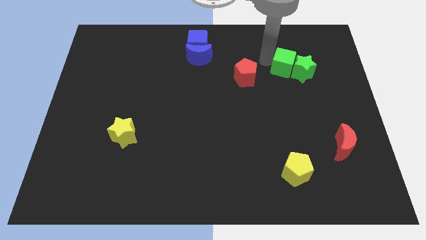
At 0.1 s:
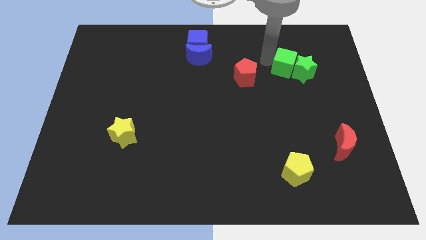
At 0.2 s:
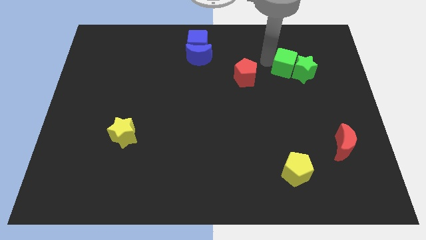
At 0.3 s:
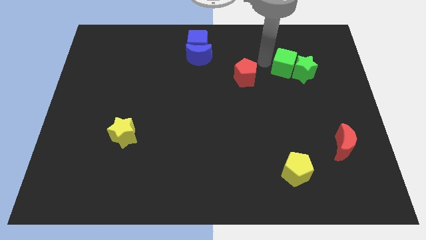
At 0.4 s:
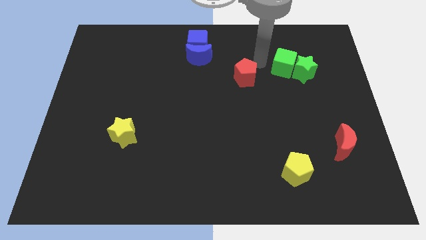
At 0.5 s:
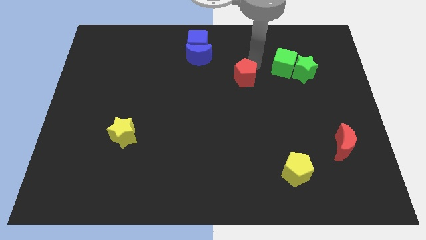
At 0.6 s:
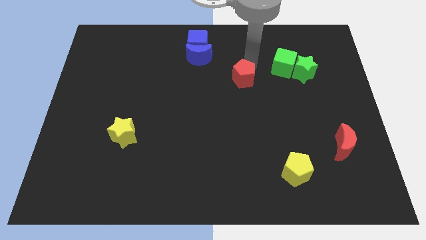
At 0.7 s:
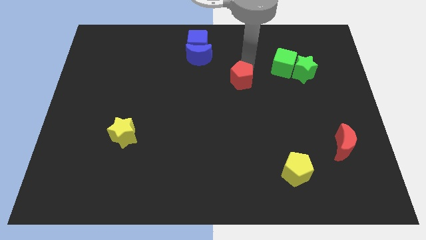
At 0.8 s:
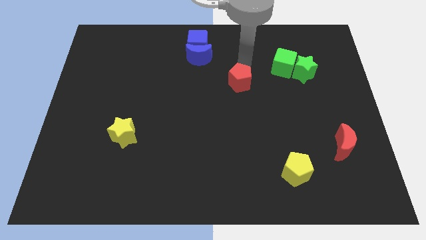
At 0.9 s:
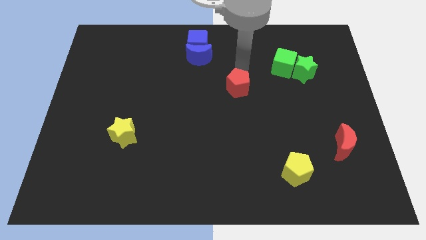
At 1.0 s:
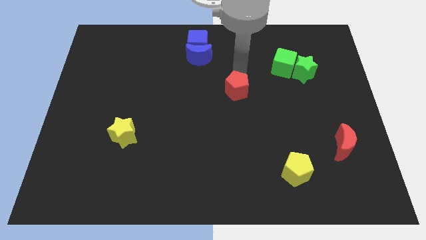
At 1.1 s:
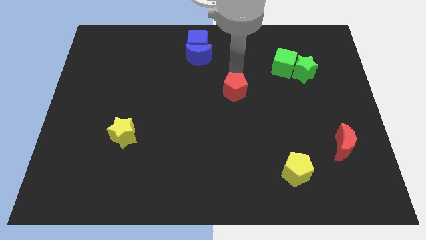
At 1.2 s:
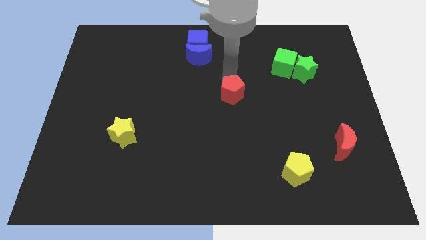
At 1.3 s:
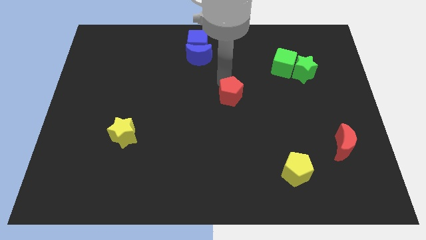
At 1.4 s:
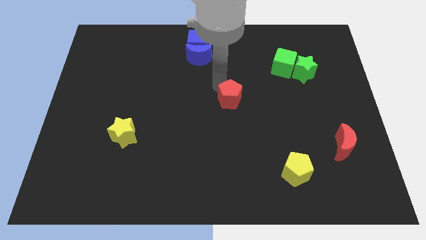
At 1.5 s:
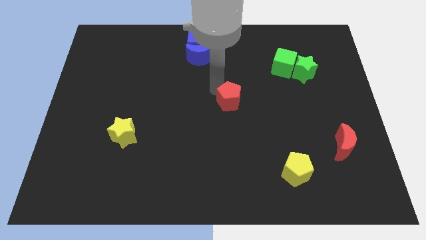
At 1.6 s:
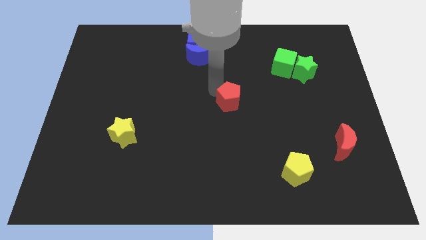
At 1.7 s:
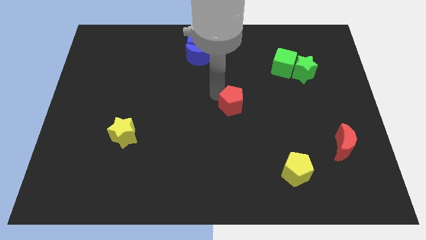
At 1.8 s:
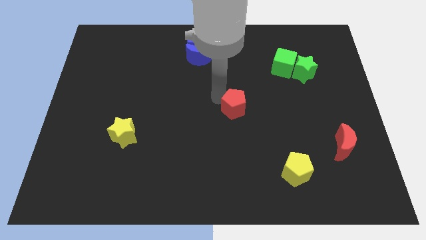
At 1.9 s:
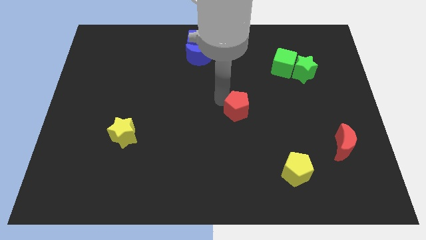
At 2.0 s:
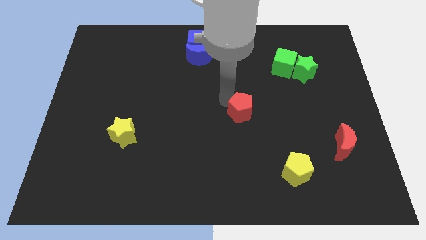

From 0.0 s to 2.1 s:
slide the red pentagon towards the center of the board

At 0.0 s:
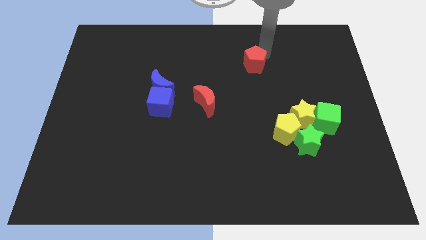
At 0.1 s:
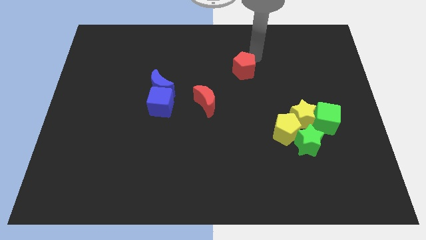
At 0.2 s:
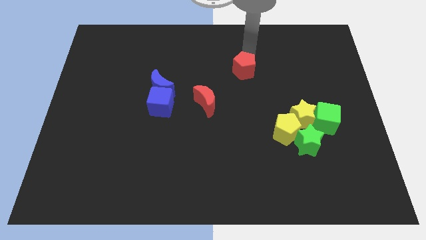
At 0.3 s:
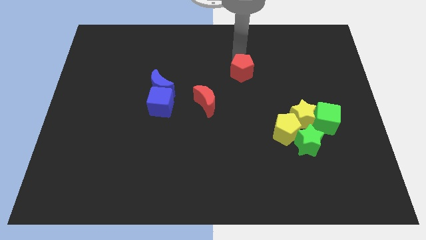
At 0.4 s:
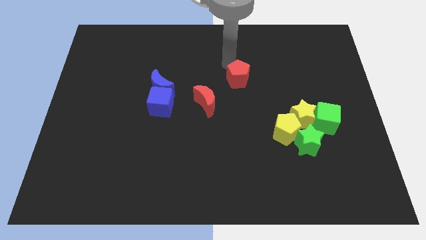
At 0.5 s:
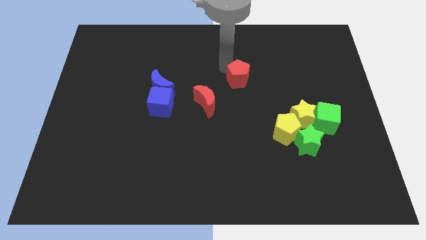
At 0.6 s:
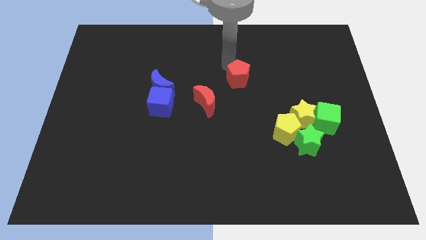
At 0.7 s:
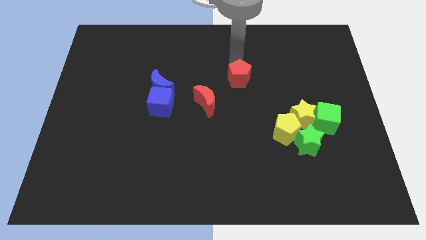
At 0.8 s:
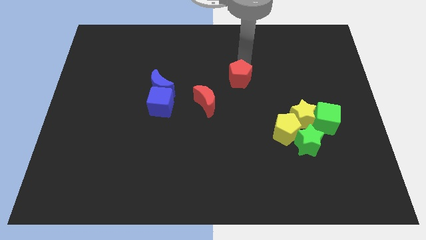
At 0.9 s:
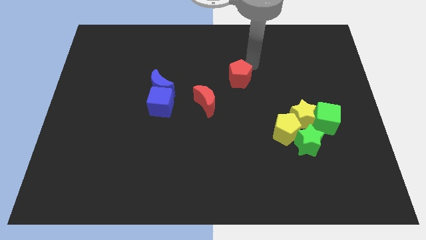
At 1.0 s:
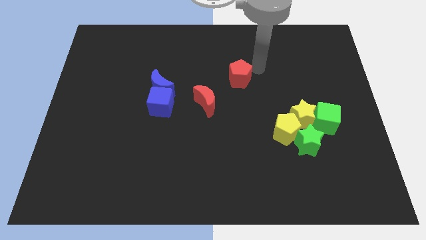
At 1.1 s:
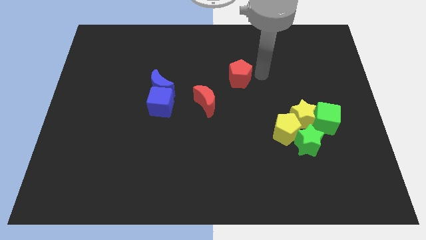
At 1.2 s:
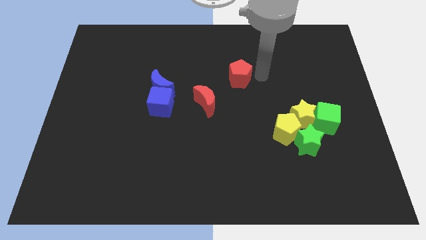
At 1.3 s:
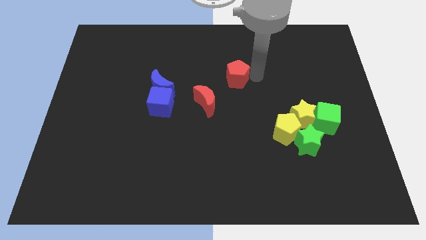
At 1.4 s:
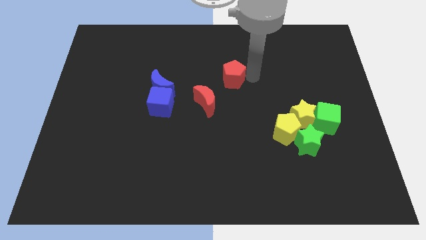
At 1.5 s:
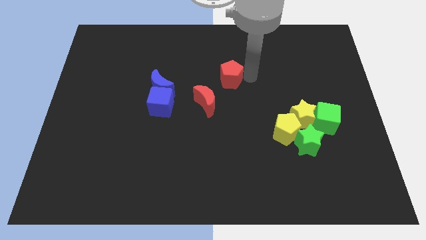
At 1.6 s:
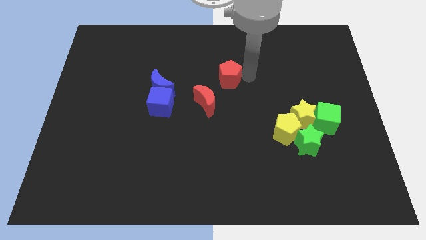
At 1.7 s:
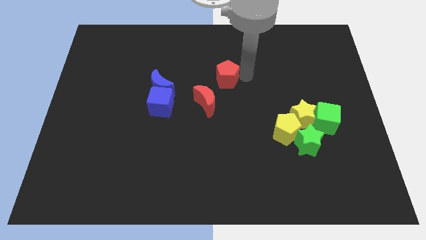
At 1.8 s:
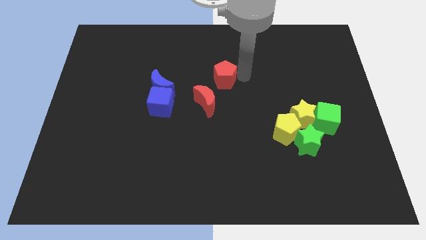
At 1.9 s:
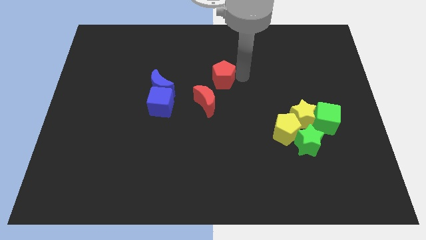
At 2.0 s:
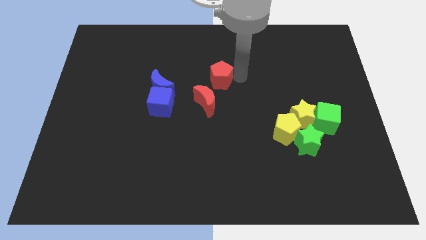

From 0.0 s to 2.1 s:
move the red pentagon towards the red crescent

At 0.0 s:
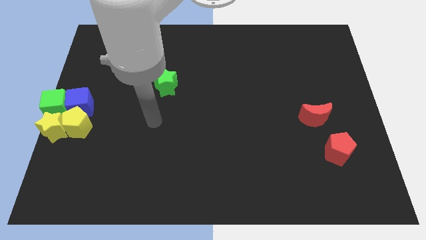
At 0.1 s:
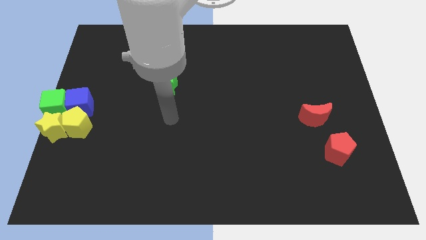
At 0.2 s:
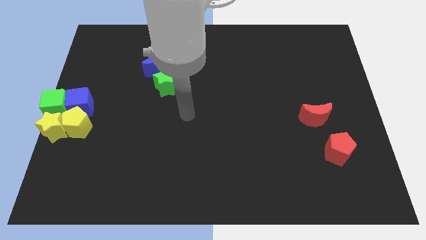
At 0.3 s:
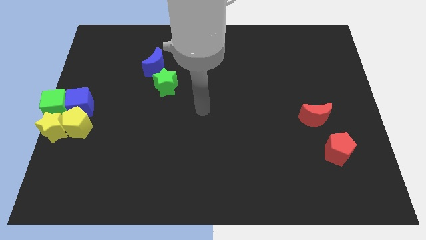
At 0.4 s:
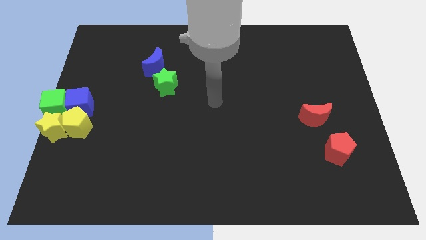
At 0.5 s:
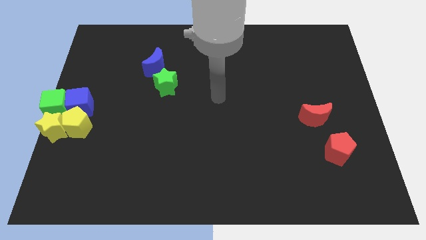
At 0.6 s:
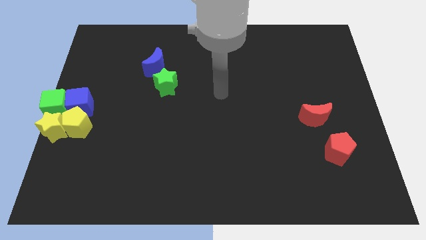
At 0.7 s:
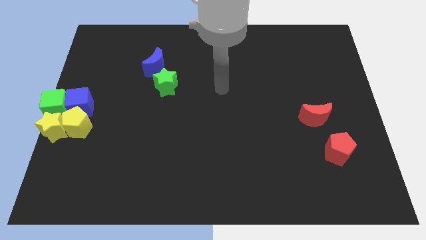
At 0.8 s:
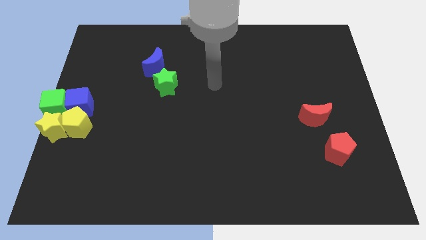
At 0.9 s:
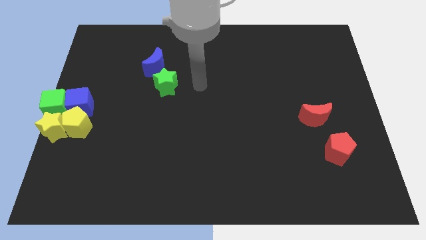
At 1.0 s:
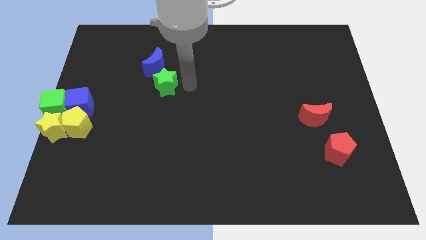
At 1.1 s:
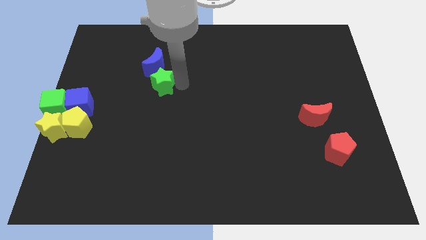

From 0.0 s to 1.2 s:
place your arm to the right of green star

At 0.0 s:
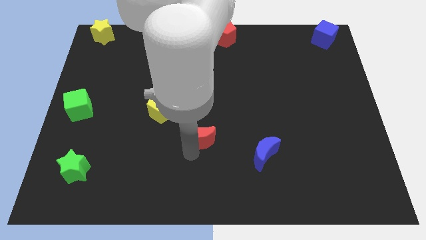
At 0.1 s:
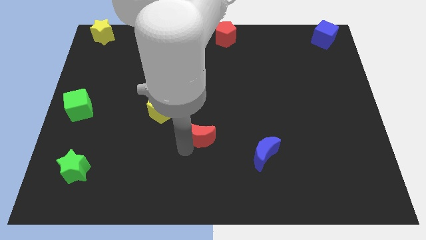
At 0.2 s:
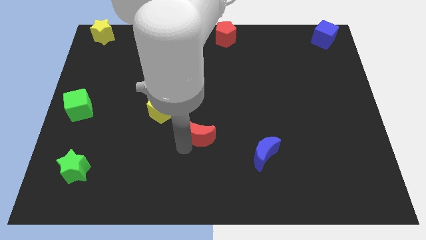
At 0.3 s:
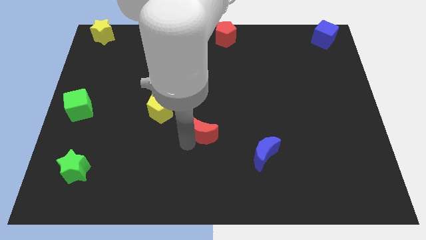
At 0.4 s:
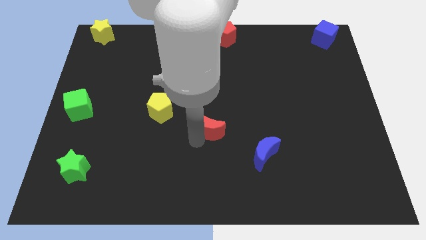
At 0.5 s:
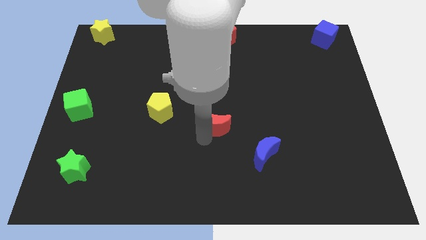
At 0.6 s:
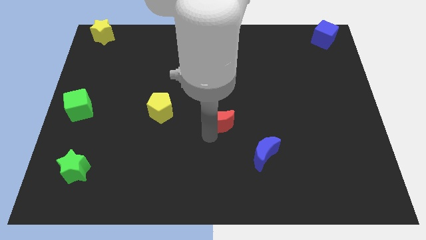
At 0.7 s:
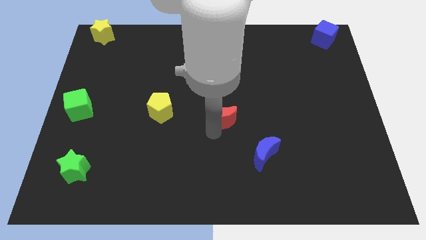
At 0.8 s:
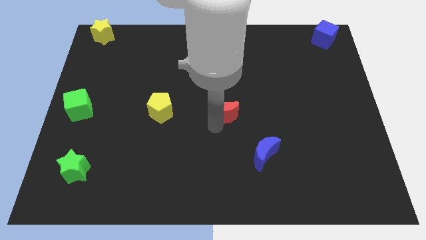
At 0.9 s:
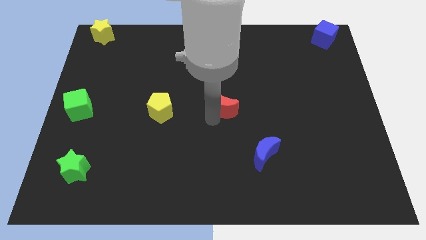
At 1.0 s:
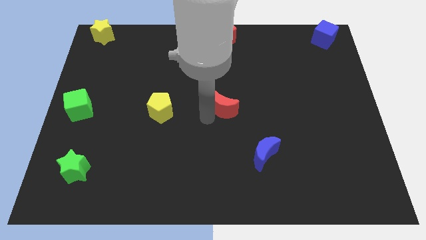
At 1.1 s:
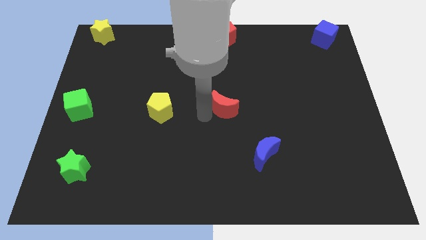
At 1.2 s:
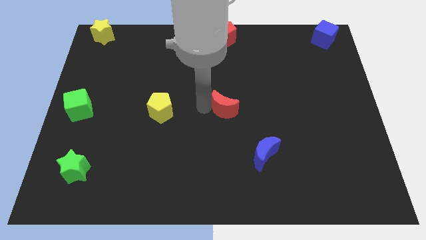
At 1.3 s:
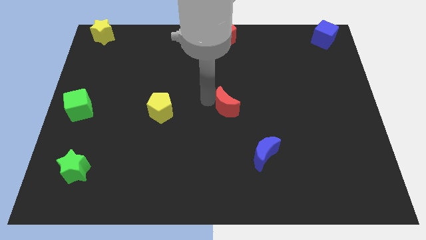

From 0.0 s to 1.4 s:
place the red moon to the right of the yellow pentagon

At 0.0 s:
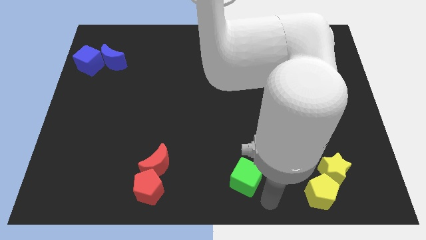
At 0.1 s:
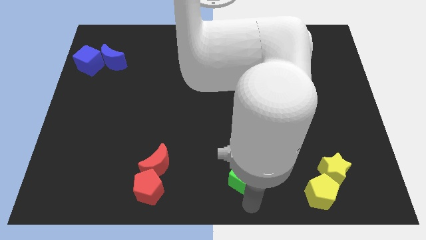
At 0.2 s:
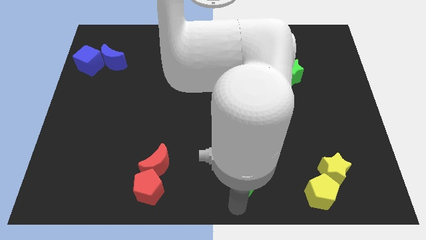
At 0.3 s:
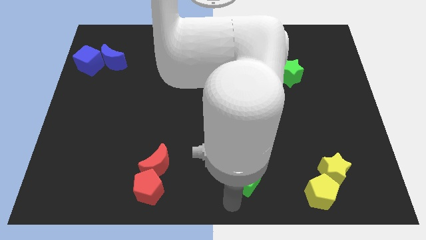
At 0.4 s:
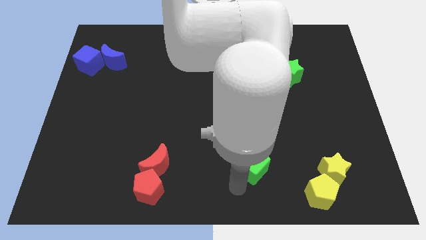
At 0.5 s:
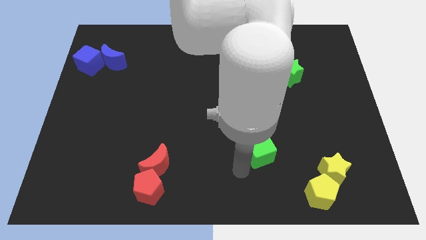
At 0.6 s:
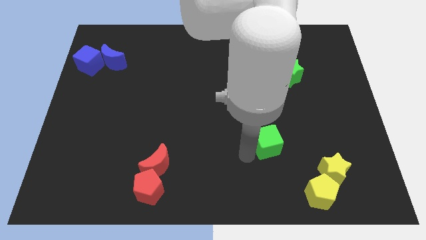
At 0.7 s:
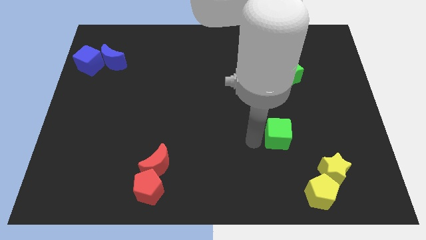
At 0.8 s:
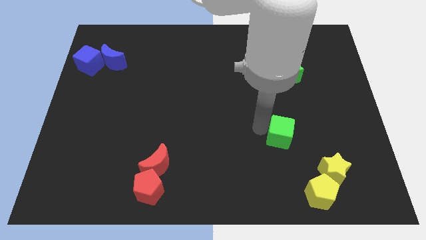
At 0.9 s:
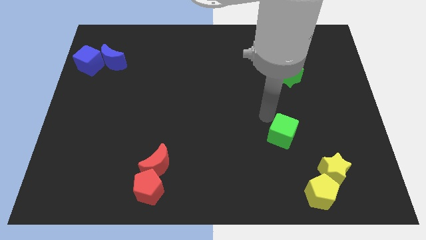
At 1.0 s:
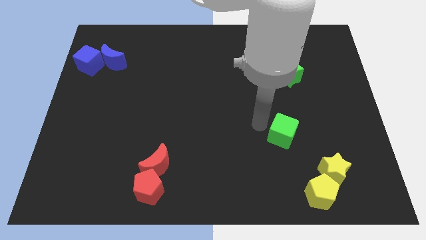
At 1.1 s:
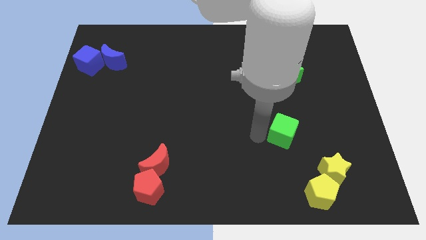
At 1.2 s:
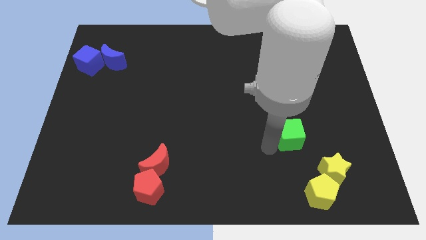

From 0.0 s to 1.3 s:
place the green cube diagonal to the yellow star

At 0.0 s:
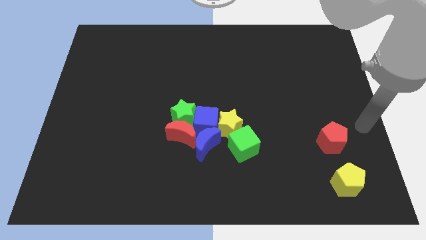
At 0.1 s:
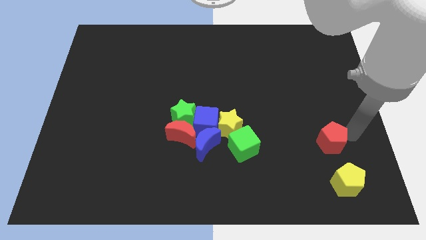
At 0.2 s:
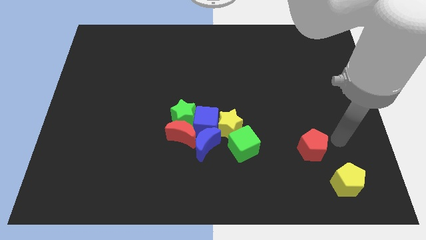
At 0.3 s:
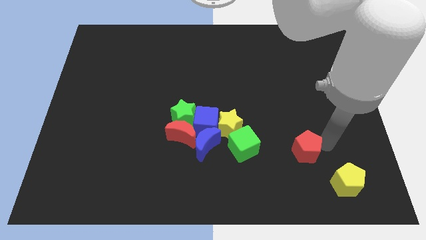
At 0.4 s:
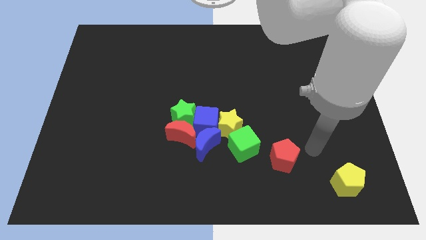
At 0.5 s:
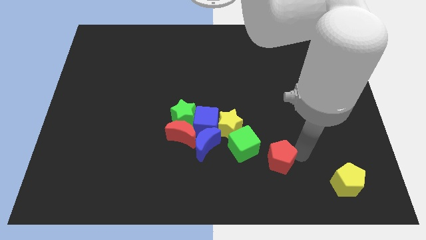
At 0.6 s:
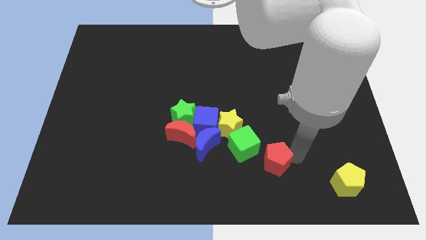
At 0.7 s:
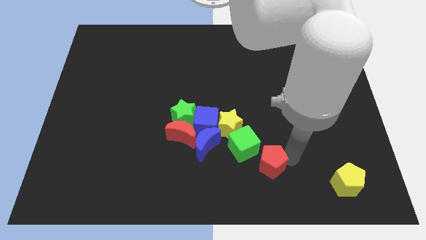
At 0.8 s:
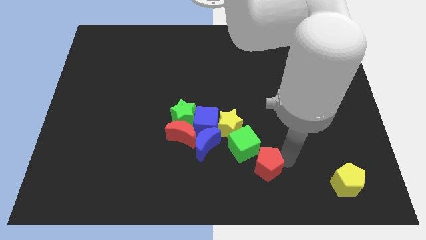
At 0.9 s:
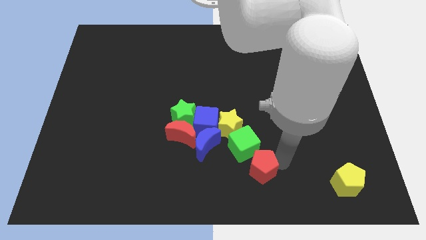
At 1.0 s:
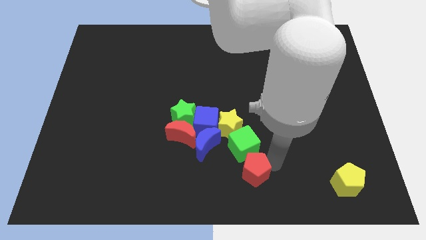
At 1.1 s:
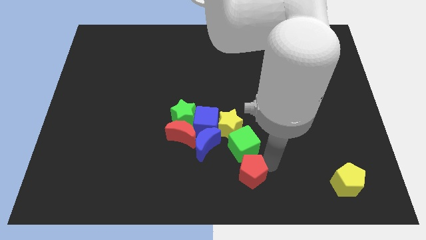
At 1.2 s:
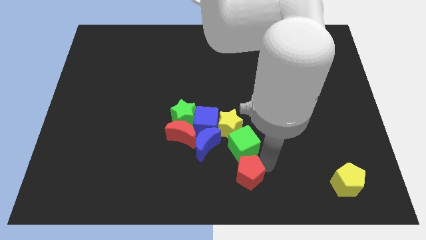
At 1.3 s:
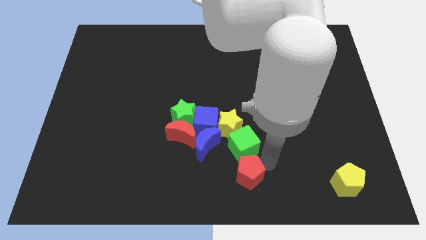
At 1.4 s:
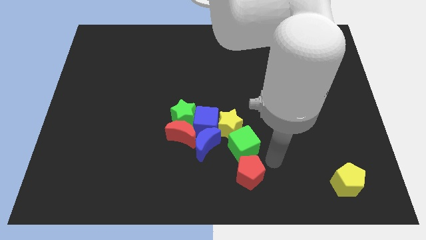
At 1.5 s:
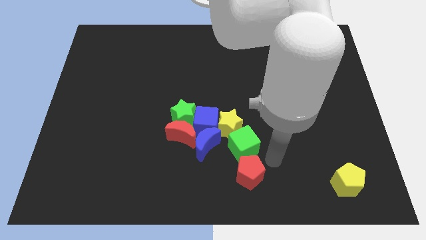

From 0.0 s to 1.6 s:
move the red pentagon below the green cube
